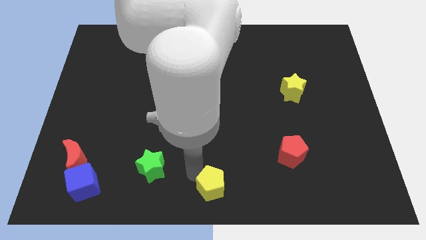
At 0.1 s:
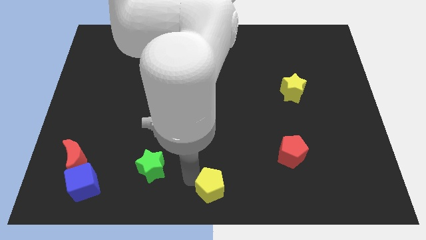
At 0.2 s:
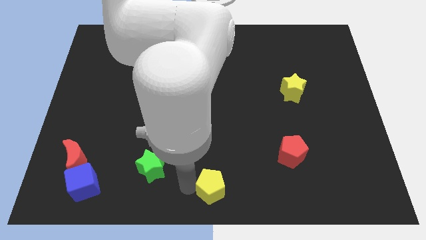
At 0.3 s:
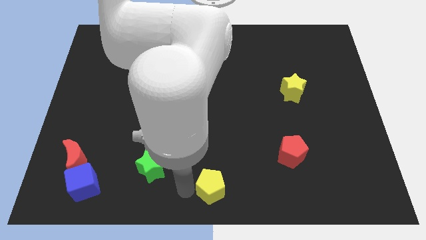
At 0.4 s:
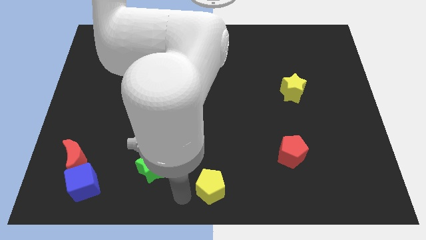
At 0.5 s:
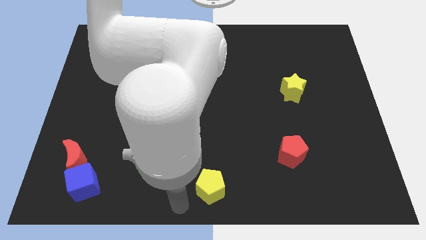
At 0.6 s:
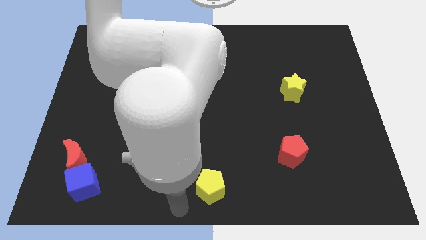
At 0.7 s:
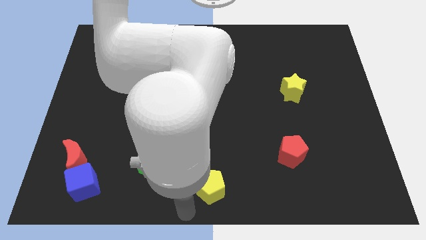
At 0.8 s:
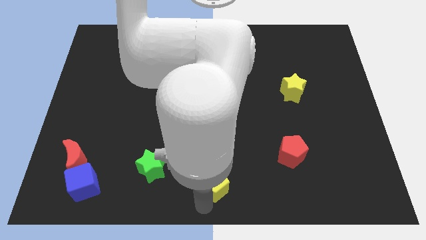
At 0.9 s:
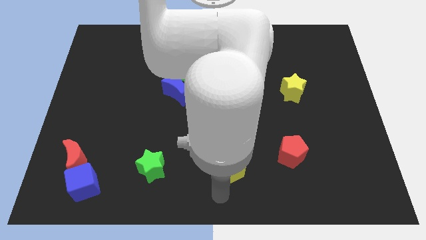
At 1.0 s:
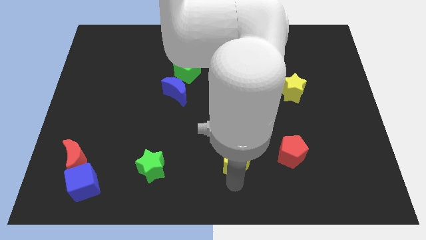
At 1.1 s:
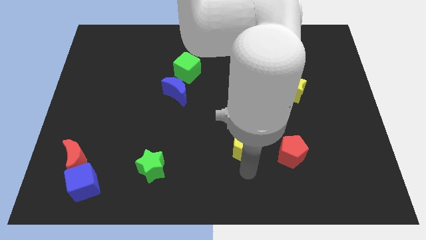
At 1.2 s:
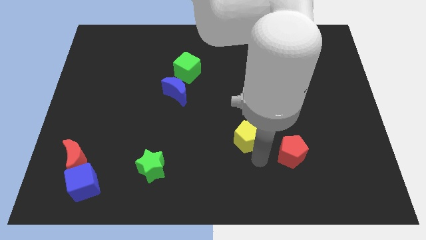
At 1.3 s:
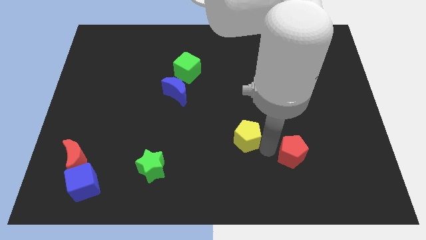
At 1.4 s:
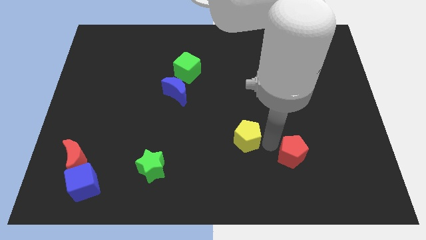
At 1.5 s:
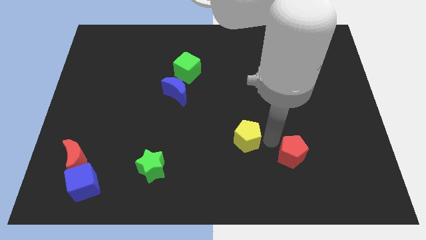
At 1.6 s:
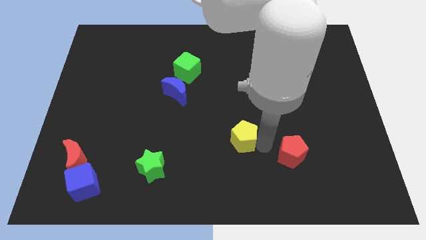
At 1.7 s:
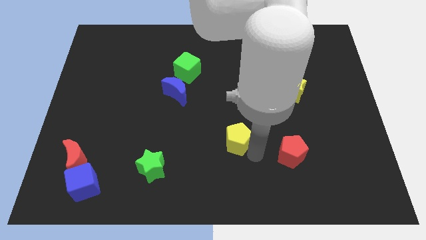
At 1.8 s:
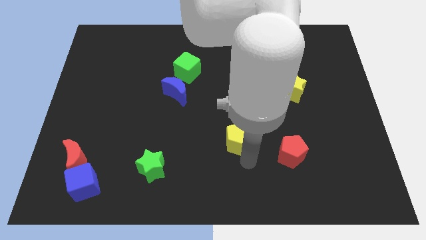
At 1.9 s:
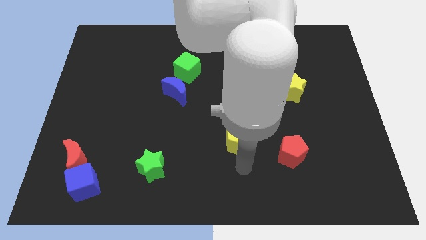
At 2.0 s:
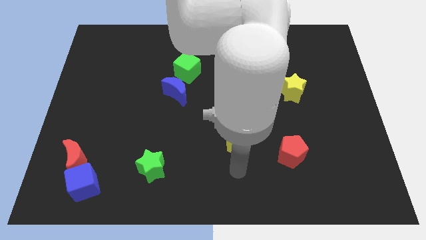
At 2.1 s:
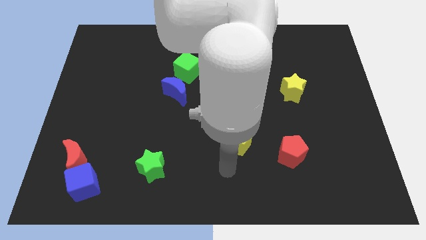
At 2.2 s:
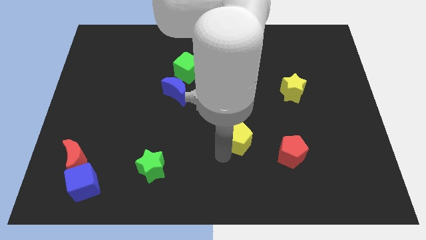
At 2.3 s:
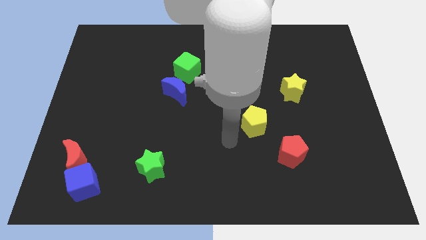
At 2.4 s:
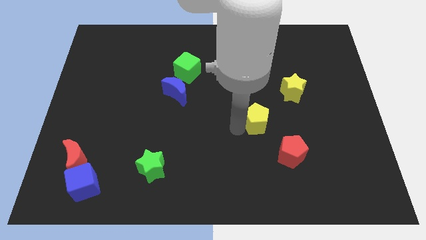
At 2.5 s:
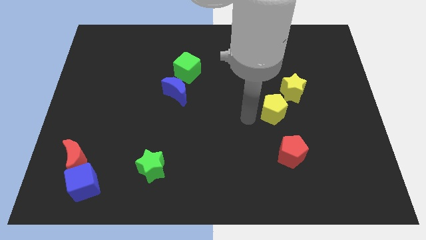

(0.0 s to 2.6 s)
move the yellow pentagon towards the bottom left of the yellow star

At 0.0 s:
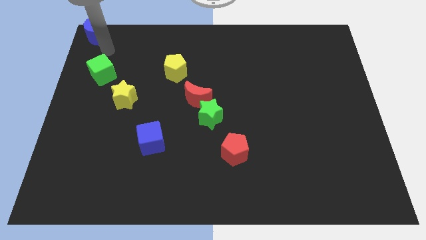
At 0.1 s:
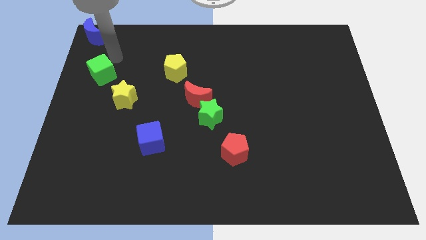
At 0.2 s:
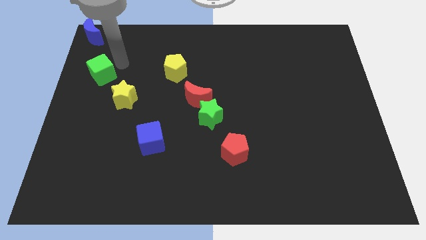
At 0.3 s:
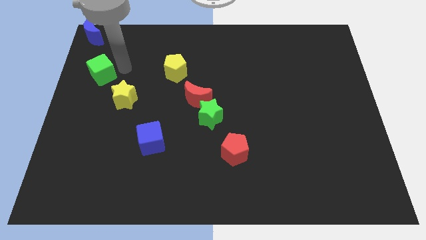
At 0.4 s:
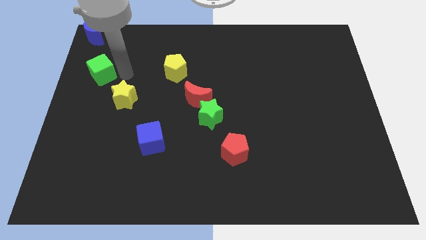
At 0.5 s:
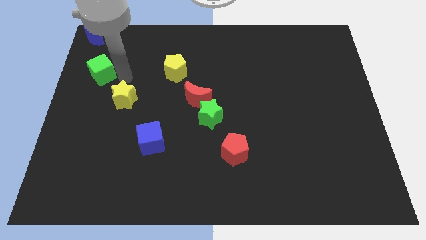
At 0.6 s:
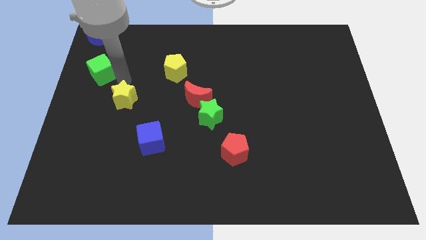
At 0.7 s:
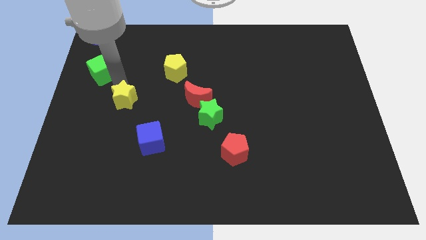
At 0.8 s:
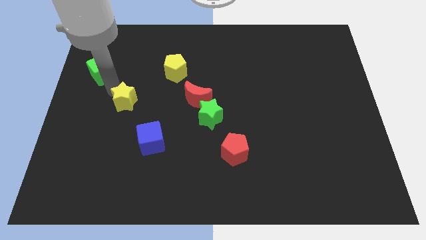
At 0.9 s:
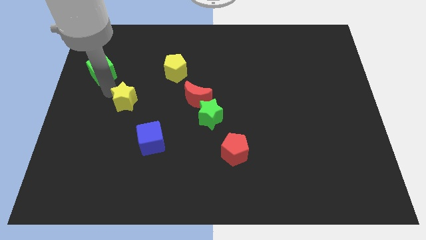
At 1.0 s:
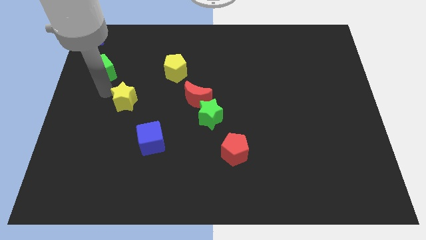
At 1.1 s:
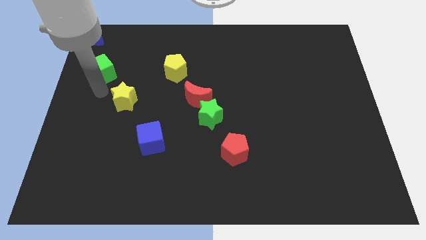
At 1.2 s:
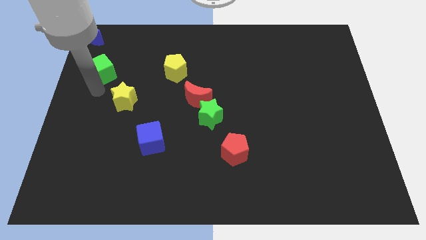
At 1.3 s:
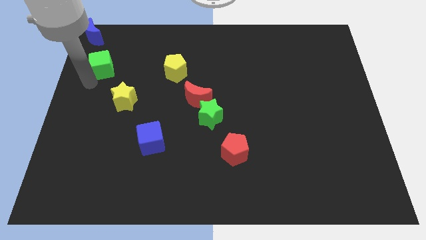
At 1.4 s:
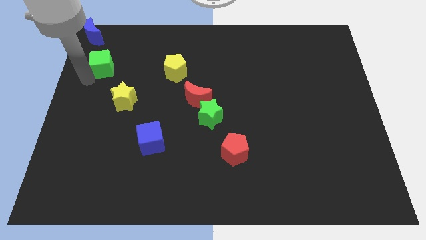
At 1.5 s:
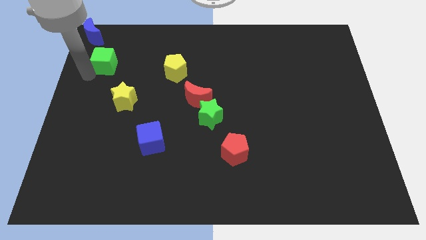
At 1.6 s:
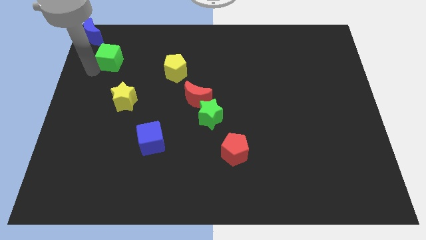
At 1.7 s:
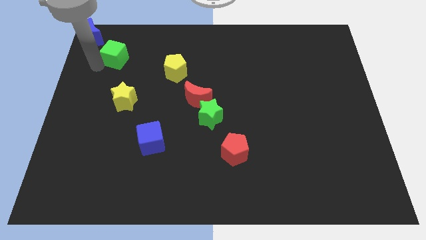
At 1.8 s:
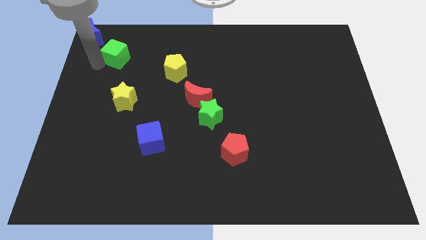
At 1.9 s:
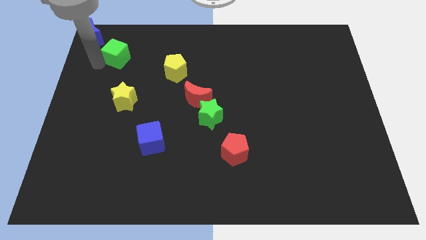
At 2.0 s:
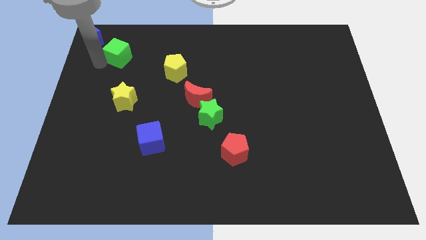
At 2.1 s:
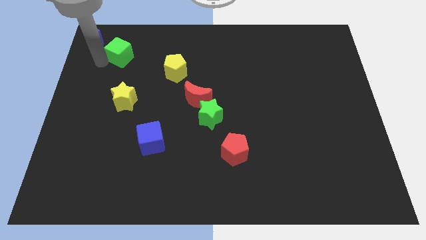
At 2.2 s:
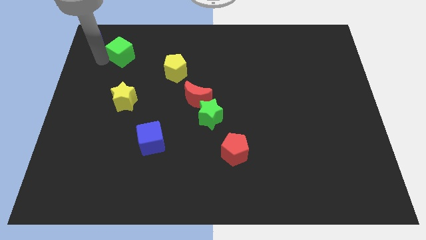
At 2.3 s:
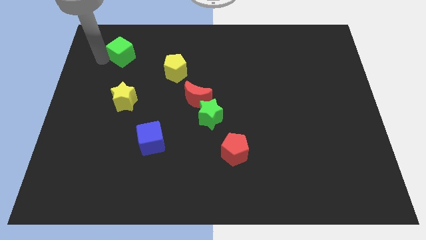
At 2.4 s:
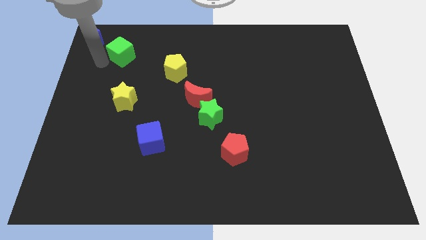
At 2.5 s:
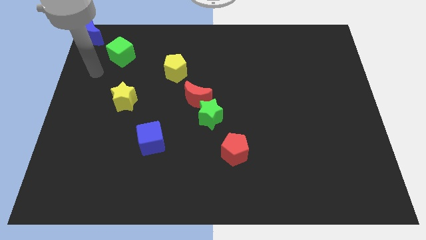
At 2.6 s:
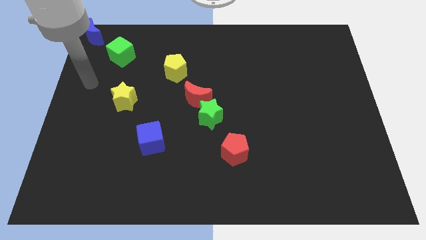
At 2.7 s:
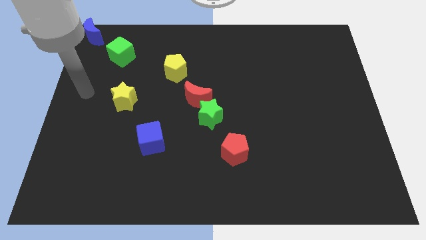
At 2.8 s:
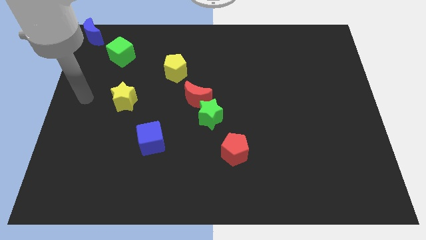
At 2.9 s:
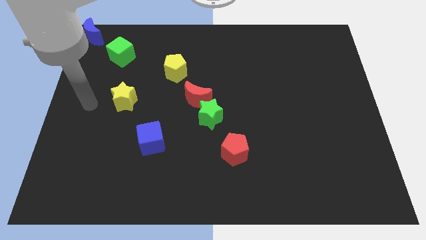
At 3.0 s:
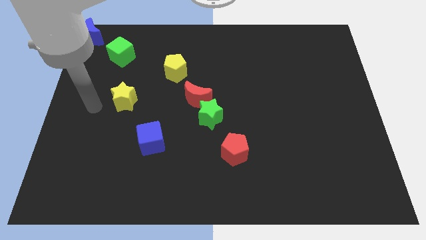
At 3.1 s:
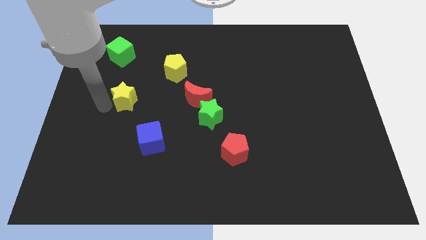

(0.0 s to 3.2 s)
move the green cube vertically to the yellow star

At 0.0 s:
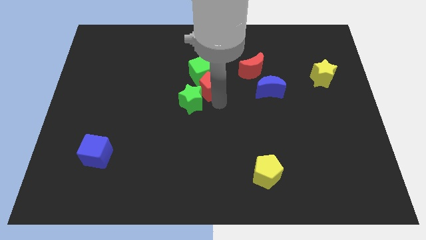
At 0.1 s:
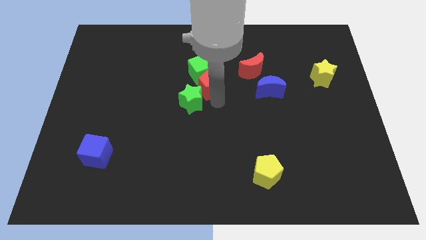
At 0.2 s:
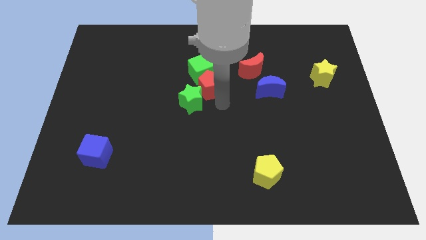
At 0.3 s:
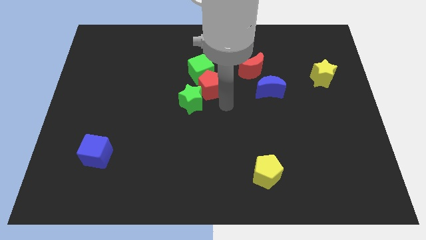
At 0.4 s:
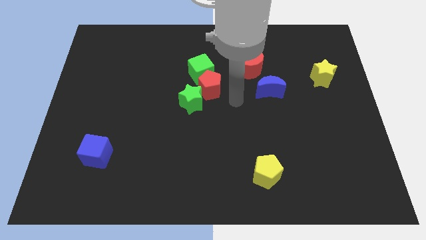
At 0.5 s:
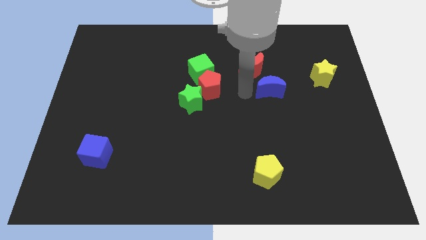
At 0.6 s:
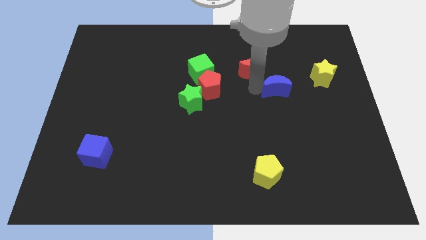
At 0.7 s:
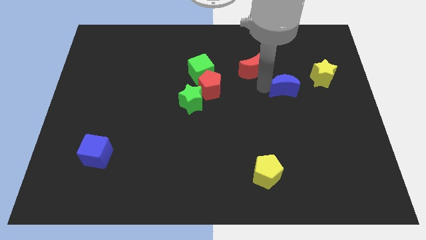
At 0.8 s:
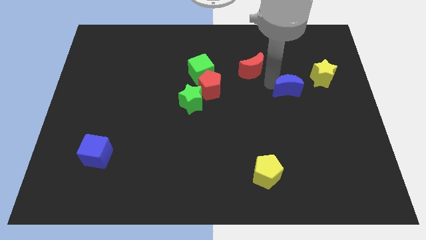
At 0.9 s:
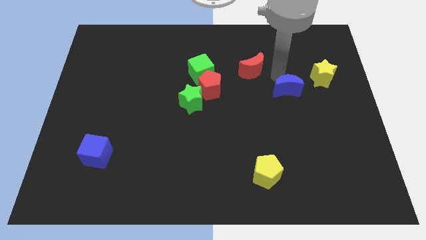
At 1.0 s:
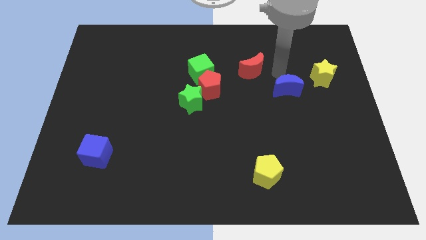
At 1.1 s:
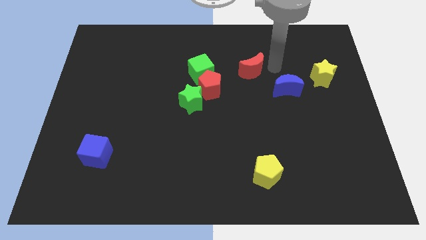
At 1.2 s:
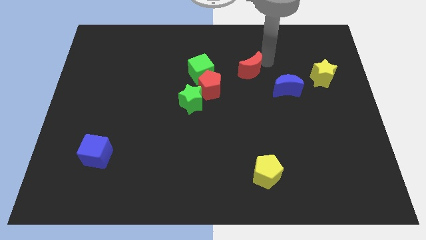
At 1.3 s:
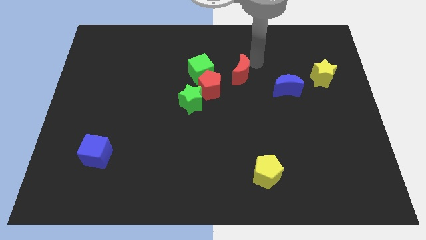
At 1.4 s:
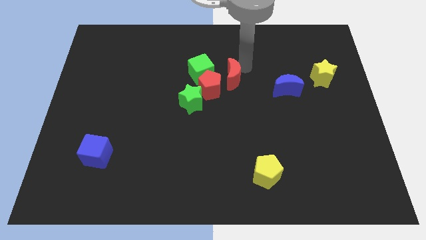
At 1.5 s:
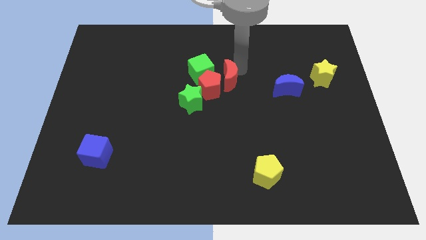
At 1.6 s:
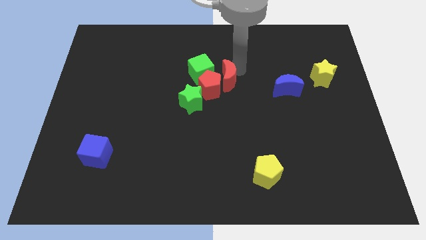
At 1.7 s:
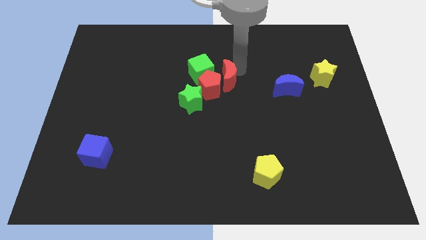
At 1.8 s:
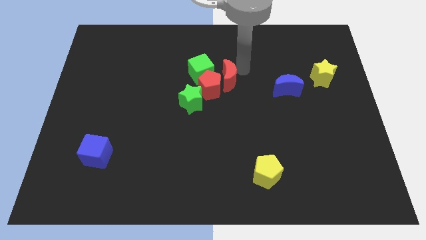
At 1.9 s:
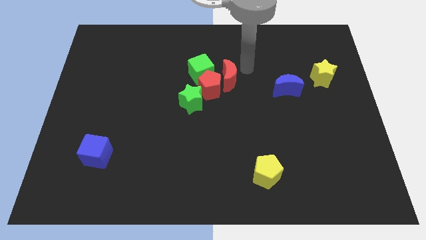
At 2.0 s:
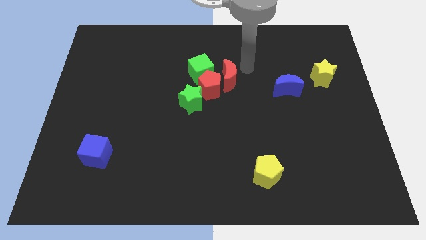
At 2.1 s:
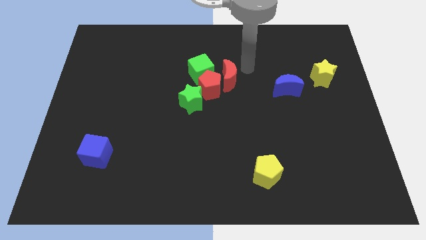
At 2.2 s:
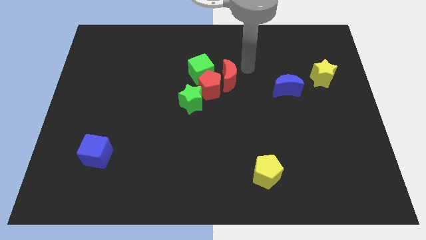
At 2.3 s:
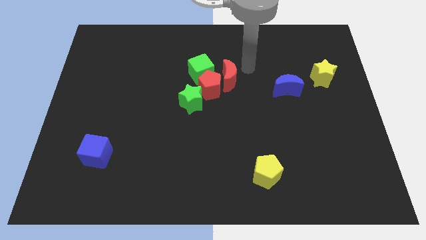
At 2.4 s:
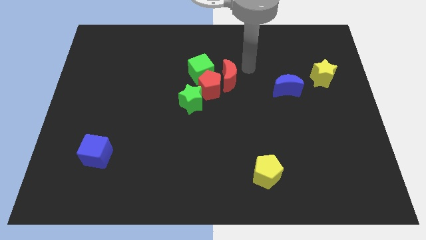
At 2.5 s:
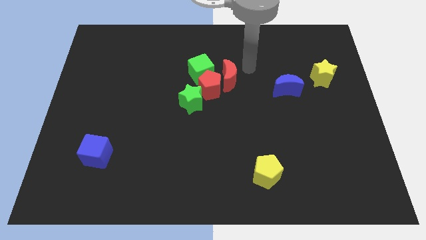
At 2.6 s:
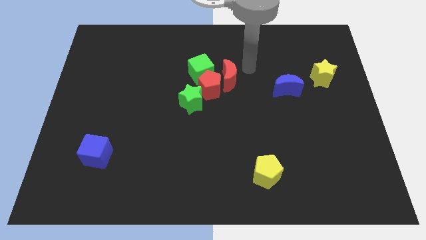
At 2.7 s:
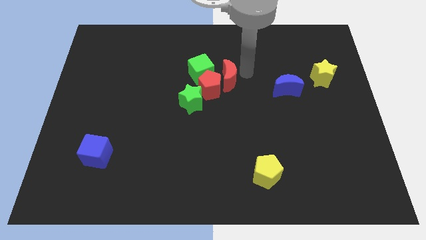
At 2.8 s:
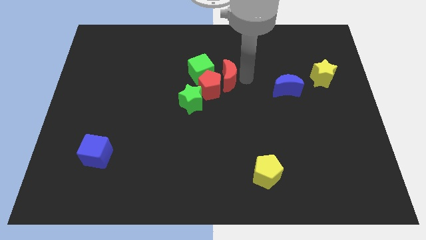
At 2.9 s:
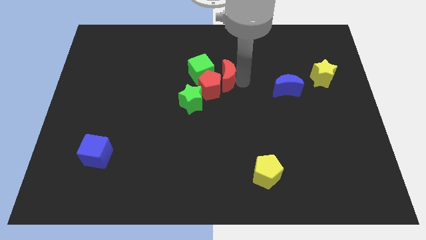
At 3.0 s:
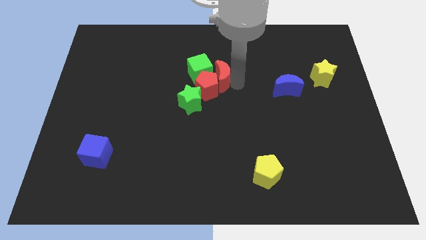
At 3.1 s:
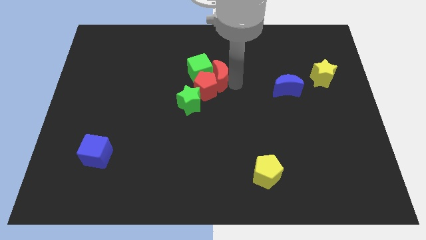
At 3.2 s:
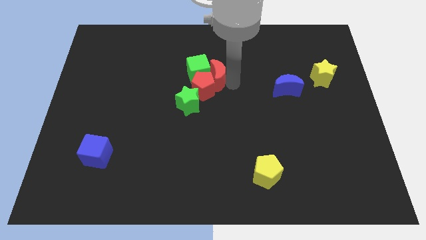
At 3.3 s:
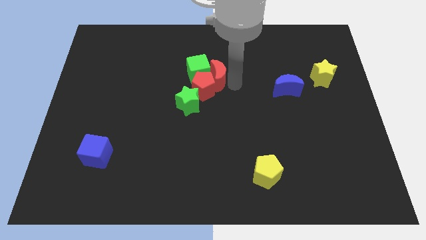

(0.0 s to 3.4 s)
push the red crescent into the red pentagon and green cube
